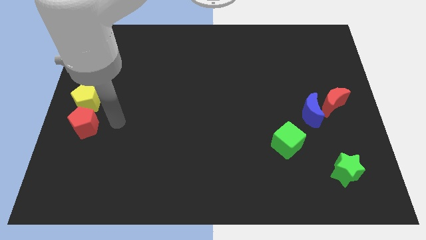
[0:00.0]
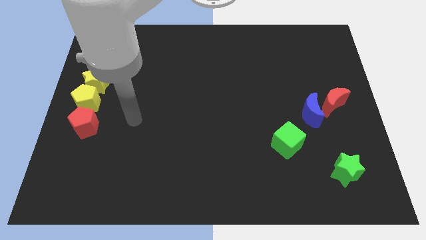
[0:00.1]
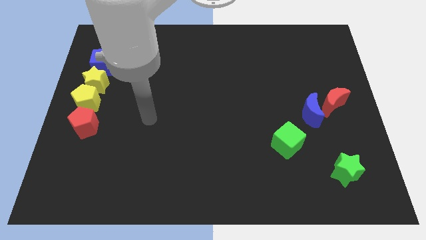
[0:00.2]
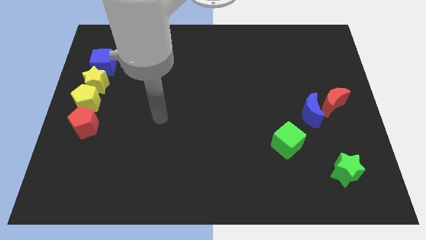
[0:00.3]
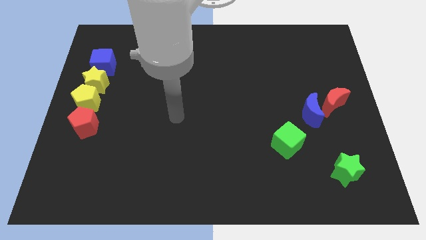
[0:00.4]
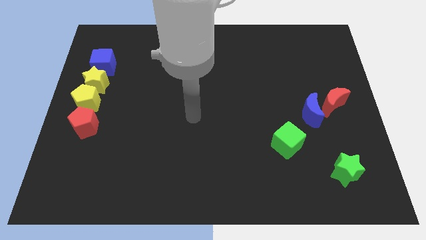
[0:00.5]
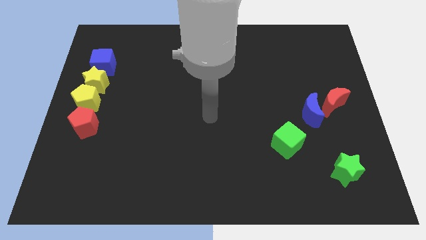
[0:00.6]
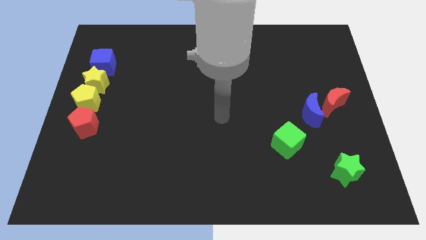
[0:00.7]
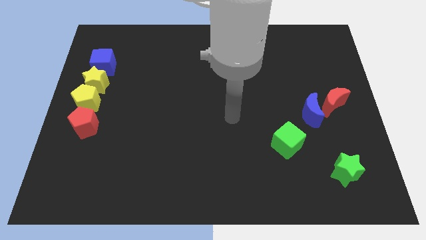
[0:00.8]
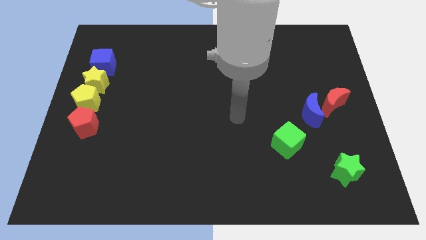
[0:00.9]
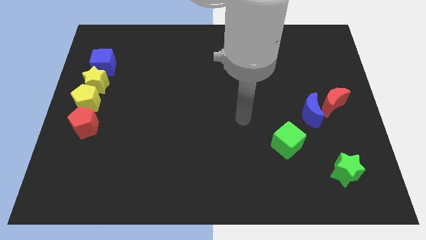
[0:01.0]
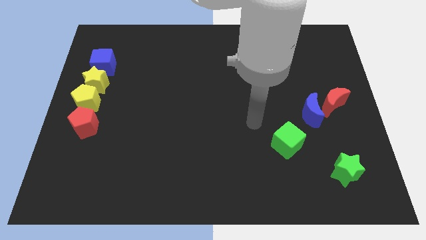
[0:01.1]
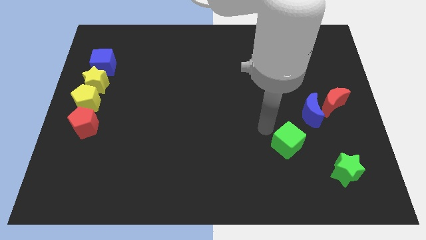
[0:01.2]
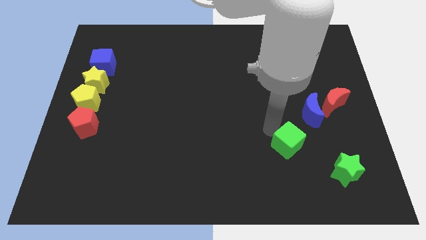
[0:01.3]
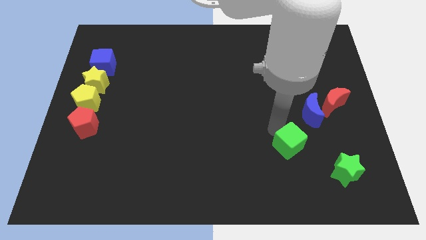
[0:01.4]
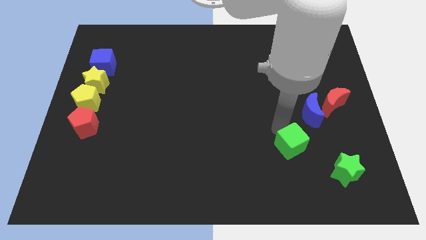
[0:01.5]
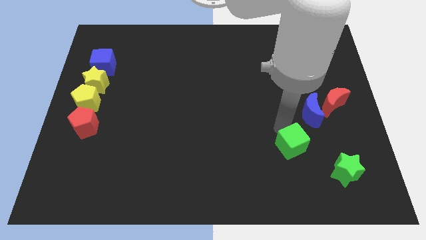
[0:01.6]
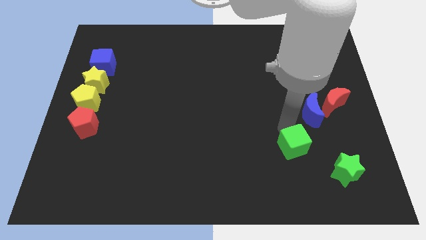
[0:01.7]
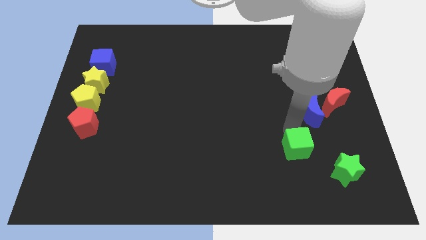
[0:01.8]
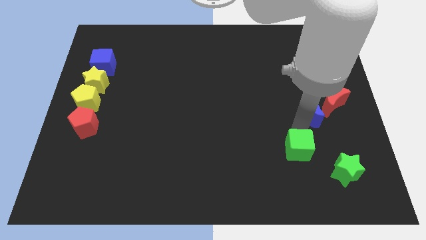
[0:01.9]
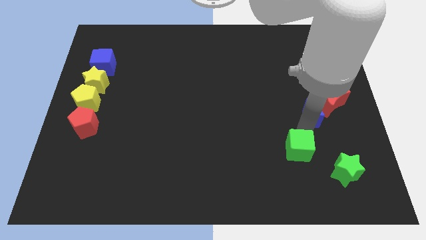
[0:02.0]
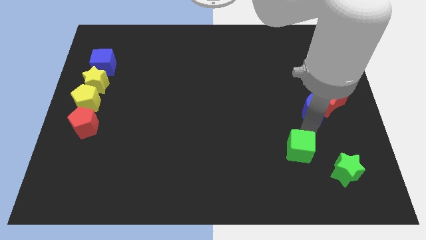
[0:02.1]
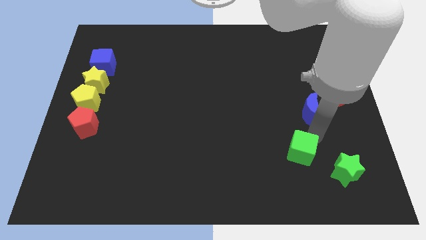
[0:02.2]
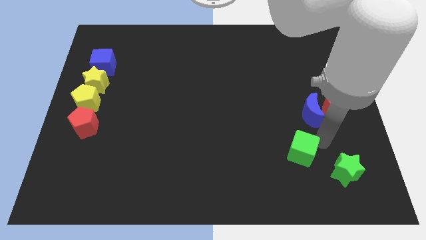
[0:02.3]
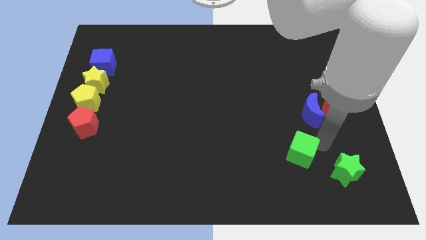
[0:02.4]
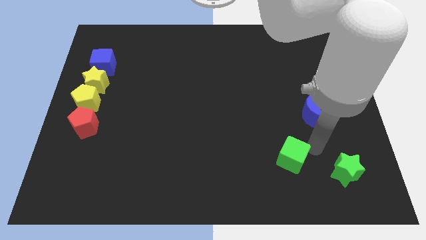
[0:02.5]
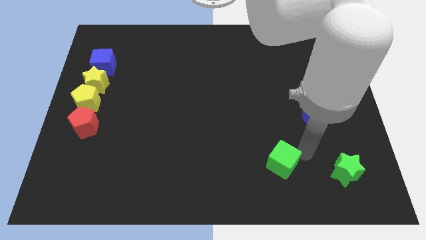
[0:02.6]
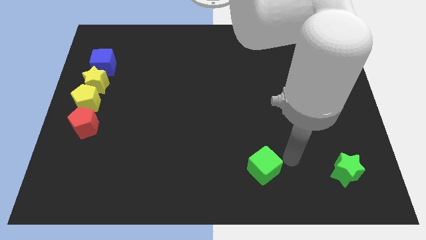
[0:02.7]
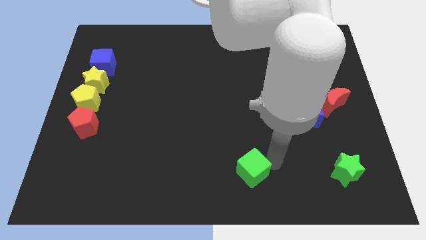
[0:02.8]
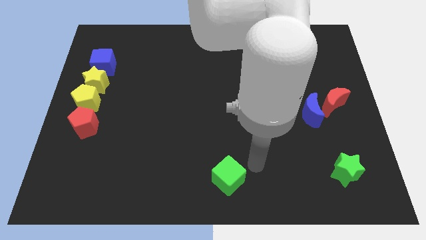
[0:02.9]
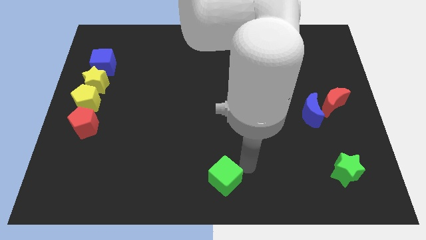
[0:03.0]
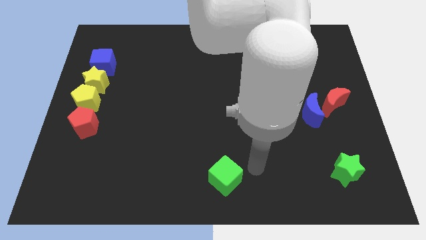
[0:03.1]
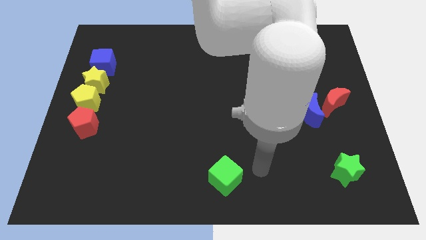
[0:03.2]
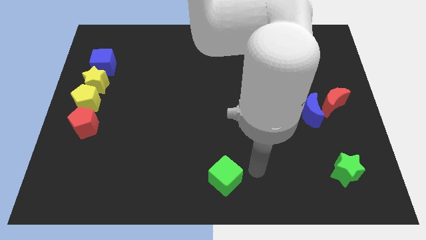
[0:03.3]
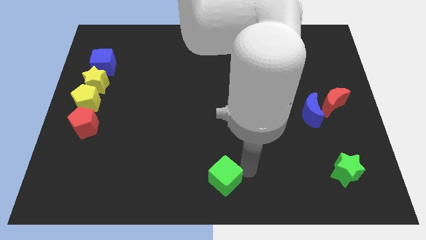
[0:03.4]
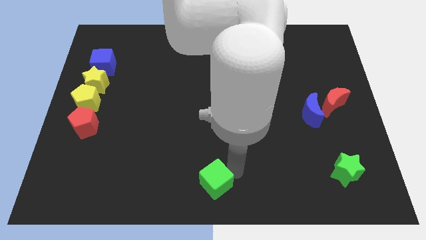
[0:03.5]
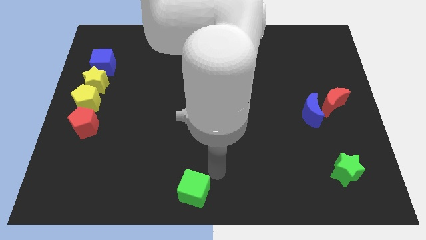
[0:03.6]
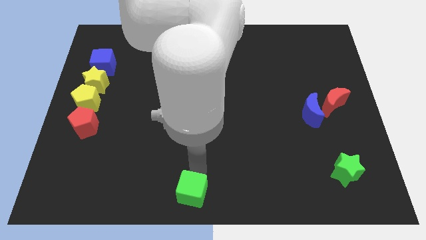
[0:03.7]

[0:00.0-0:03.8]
push the green cube towards the bottom center

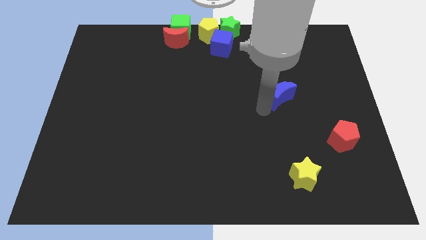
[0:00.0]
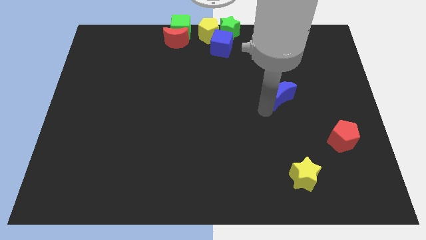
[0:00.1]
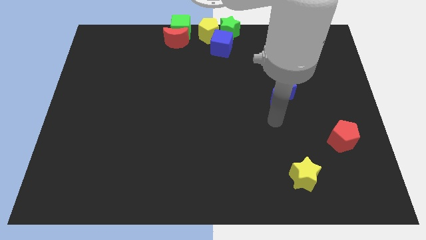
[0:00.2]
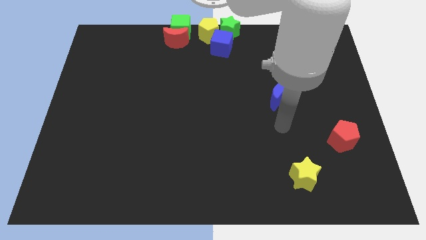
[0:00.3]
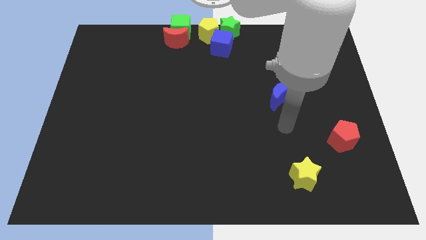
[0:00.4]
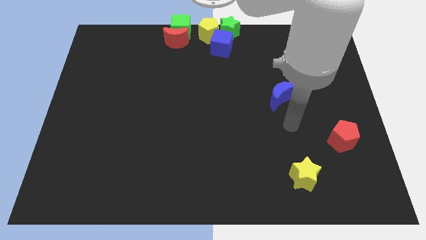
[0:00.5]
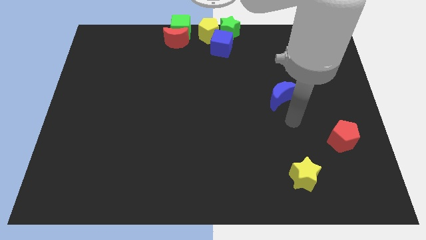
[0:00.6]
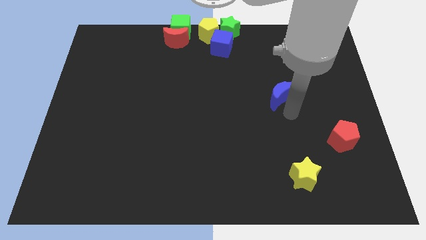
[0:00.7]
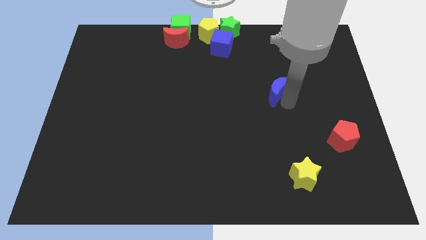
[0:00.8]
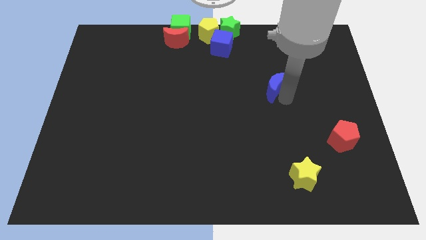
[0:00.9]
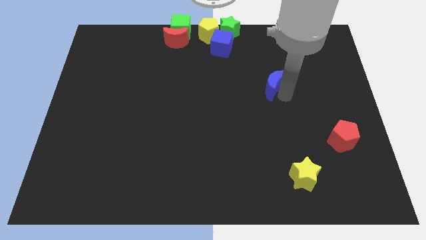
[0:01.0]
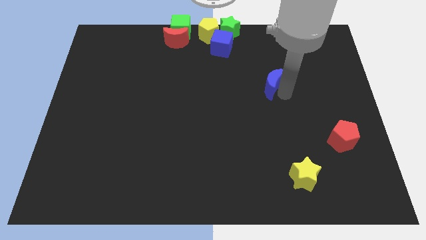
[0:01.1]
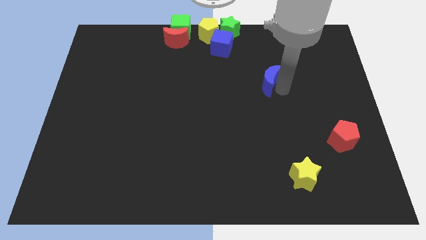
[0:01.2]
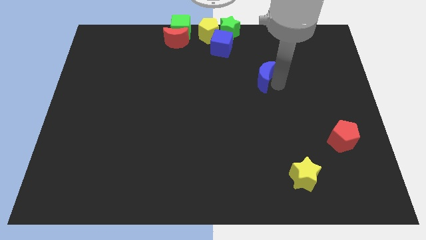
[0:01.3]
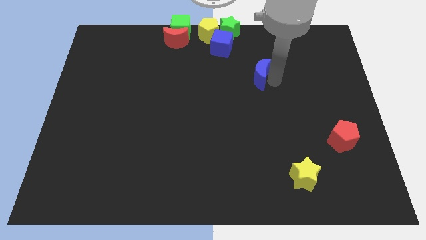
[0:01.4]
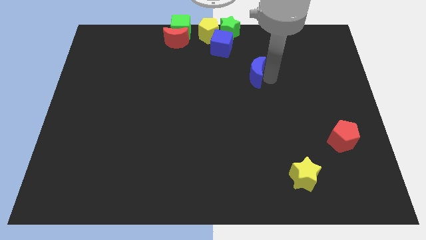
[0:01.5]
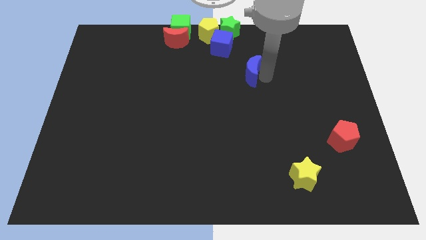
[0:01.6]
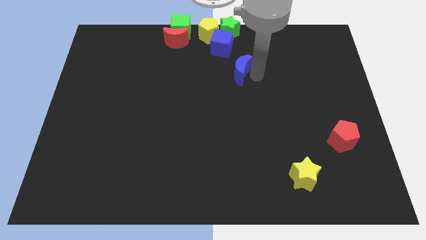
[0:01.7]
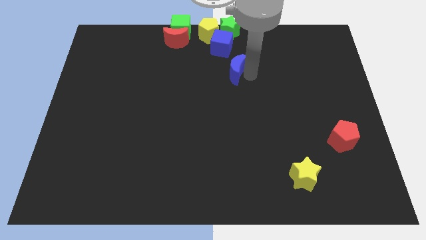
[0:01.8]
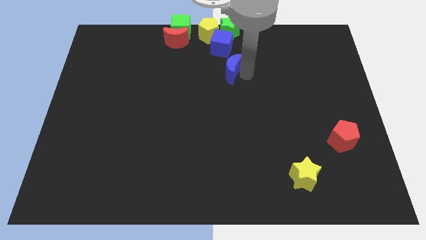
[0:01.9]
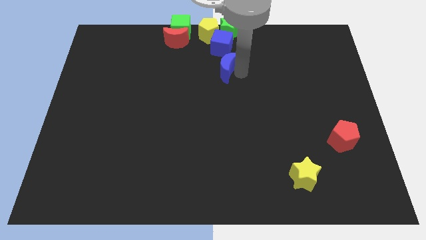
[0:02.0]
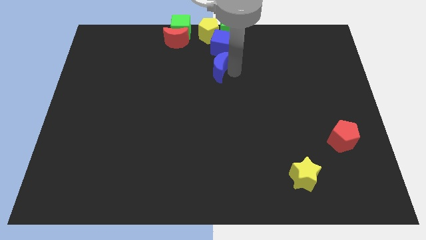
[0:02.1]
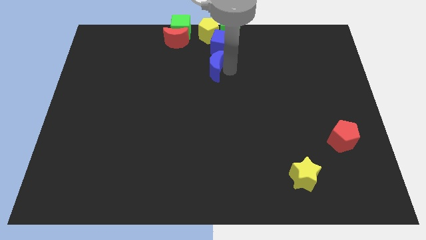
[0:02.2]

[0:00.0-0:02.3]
place the blue crescent under the blue cube

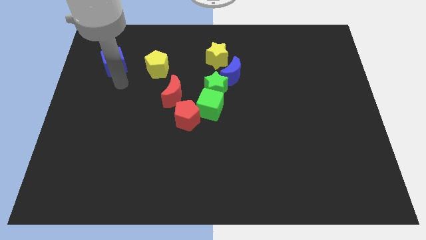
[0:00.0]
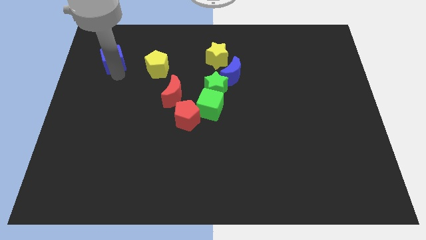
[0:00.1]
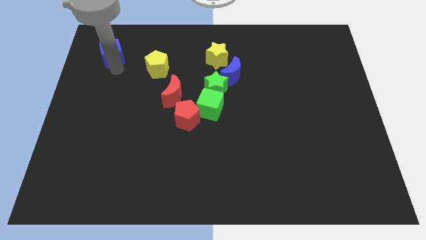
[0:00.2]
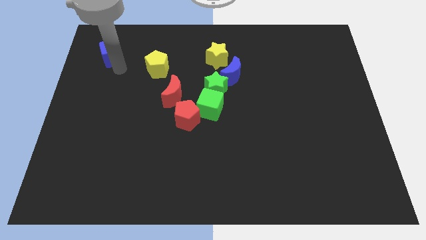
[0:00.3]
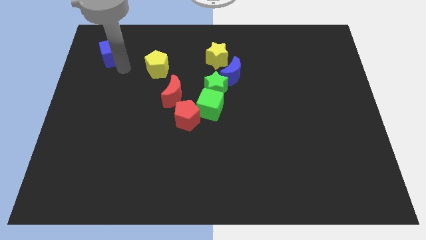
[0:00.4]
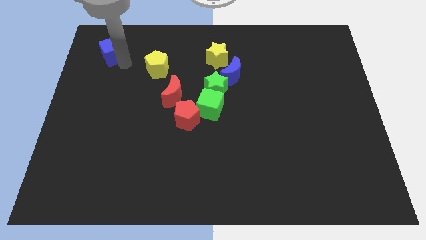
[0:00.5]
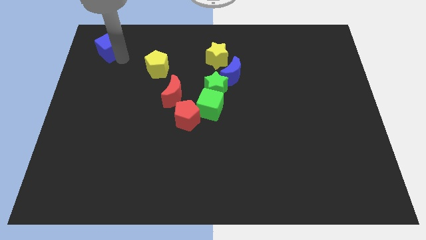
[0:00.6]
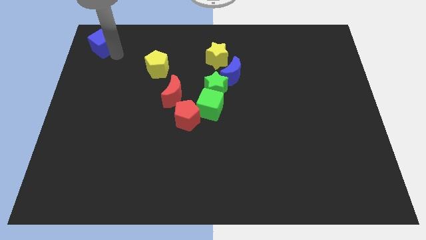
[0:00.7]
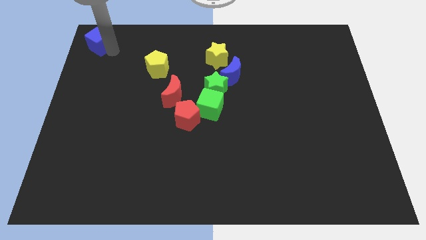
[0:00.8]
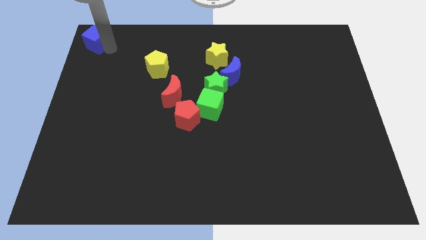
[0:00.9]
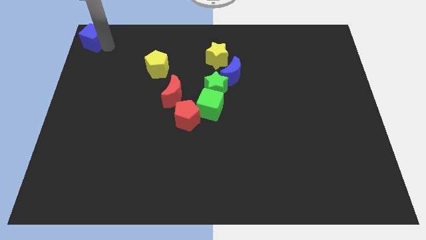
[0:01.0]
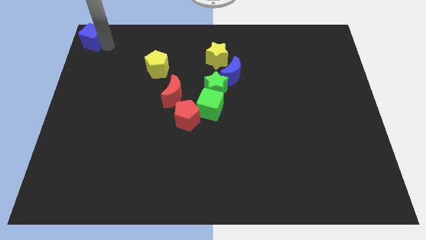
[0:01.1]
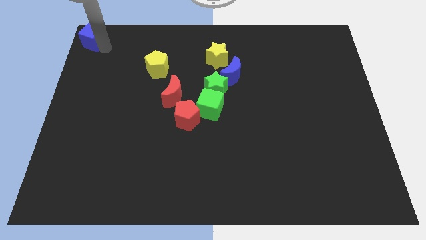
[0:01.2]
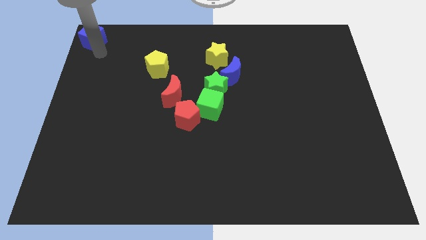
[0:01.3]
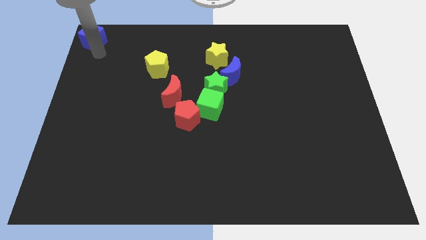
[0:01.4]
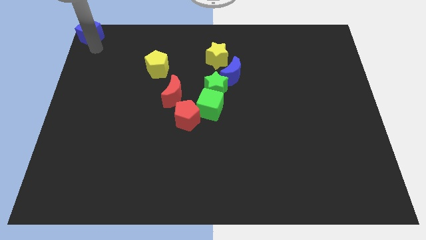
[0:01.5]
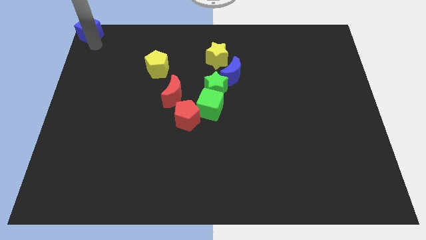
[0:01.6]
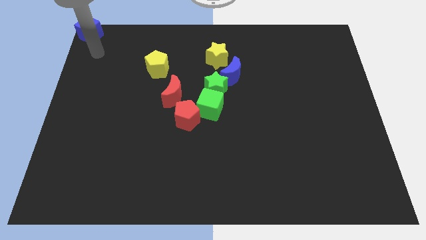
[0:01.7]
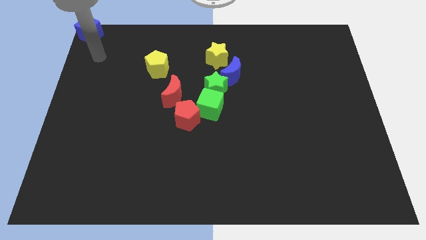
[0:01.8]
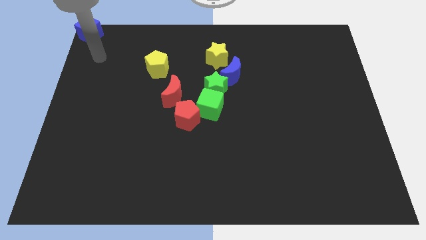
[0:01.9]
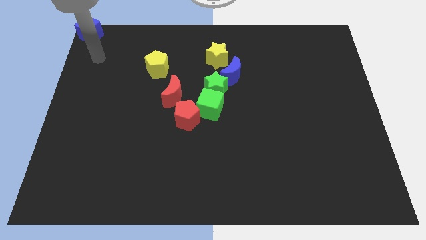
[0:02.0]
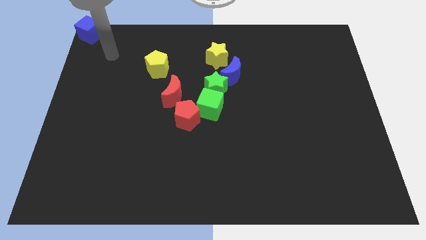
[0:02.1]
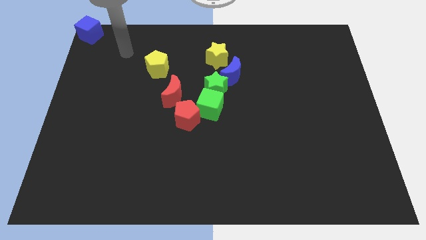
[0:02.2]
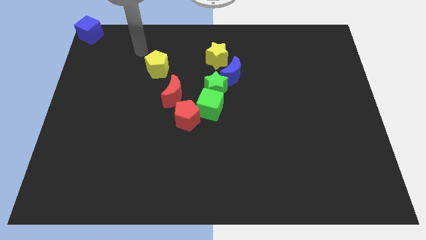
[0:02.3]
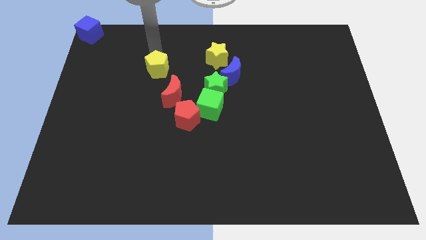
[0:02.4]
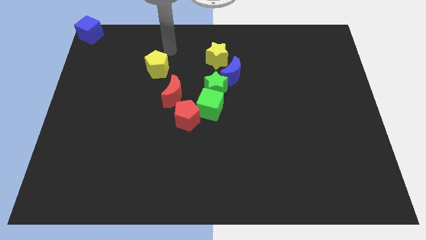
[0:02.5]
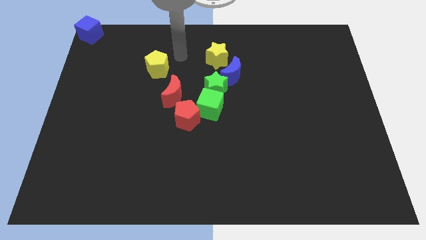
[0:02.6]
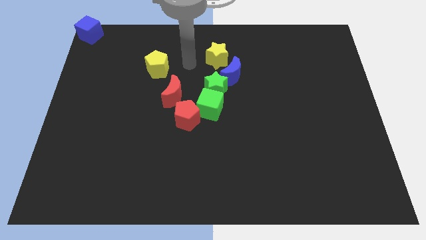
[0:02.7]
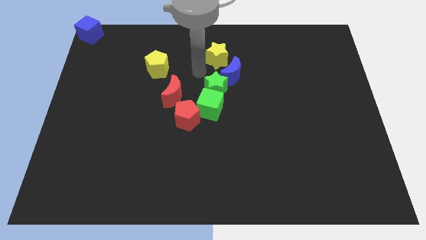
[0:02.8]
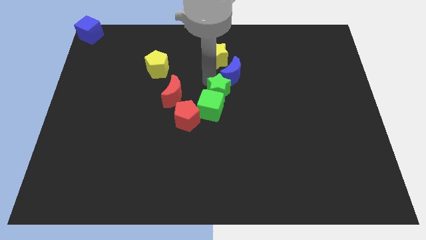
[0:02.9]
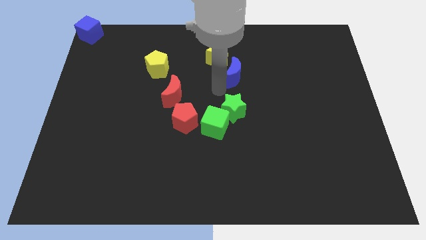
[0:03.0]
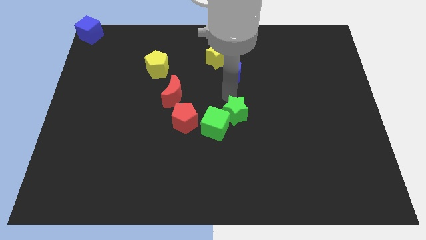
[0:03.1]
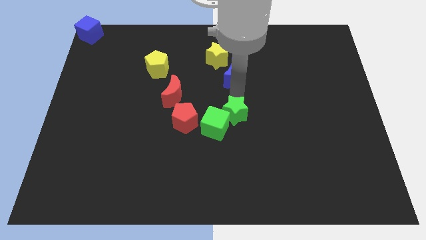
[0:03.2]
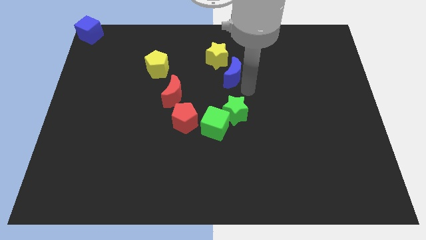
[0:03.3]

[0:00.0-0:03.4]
separate the blue moon and green star
